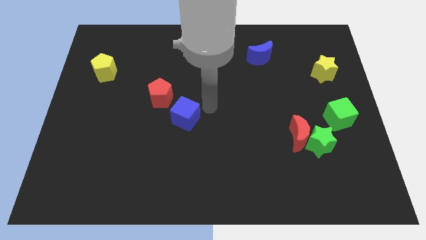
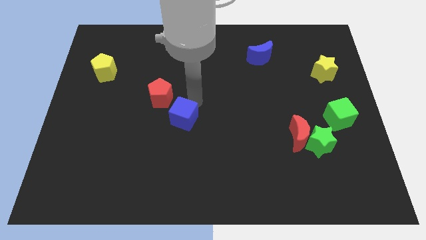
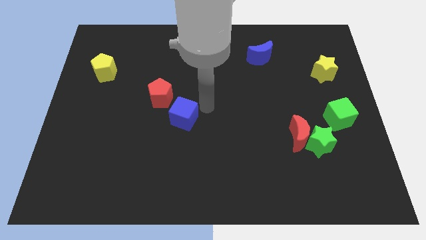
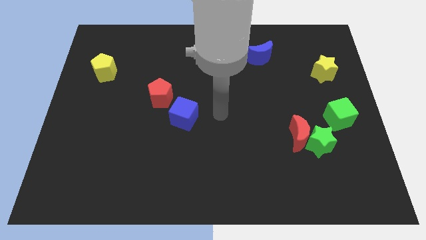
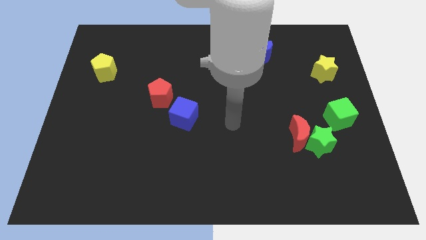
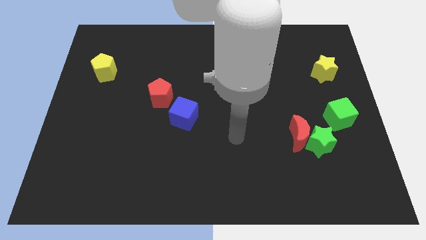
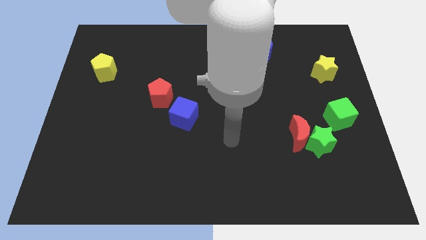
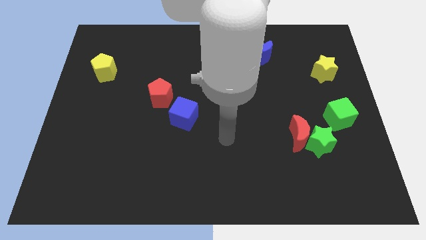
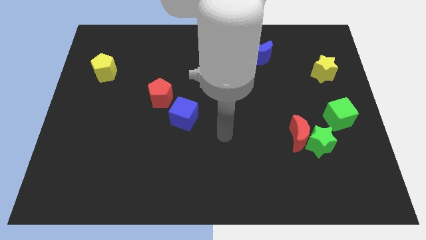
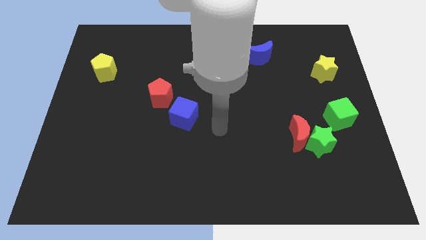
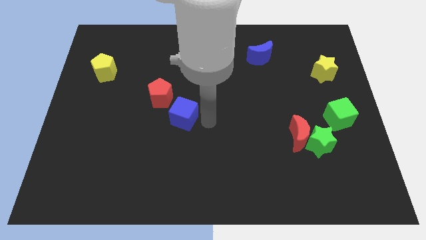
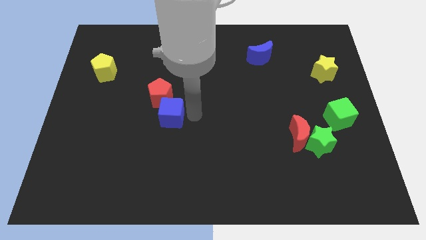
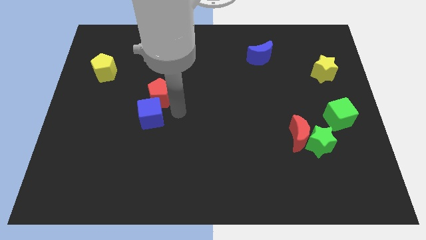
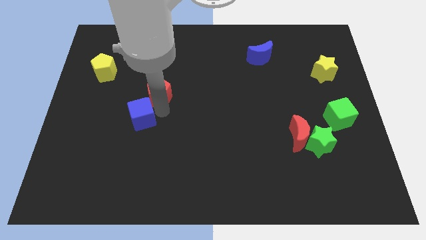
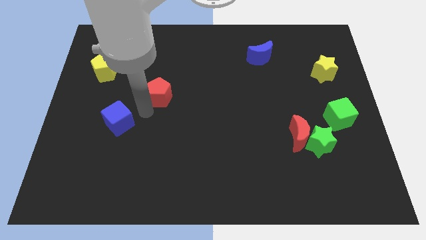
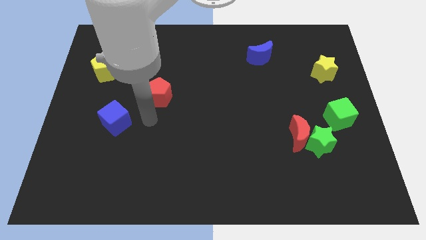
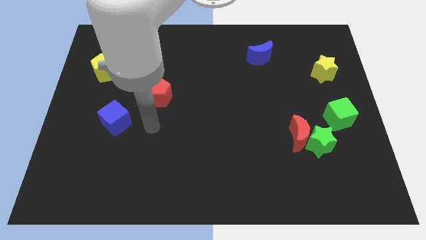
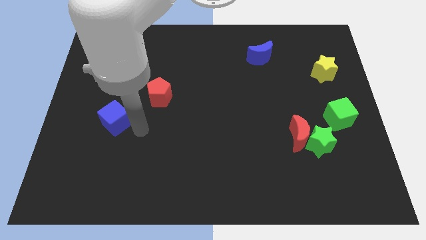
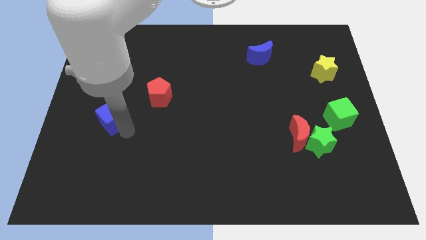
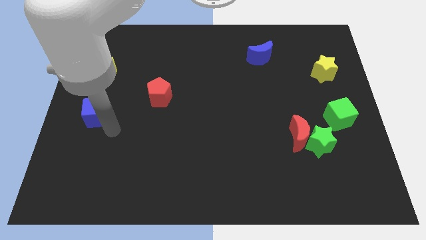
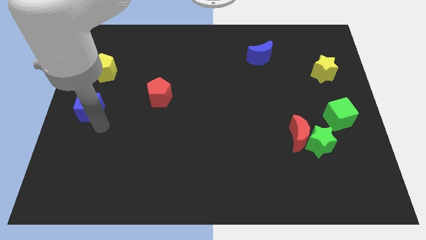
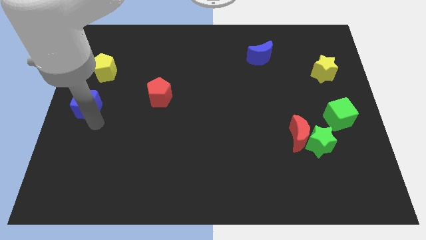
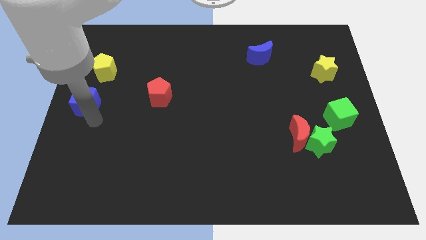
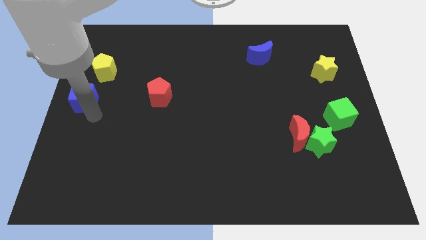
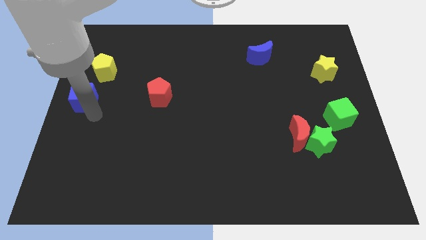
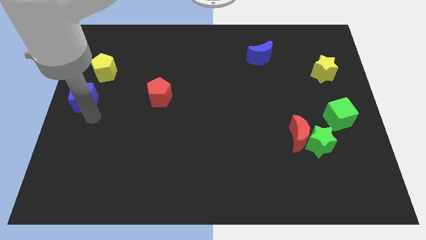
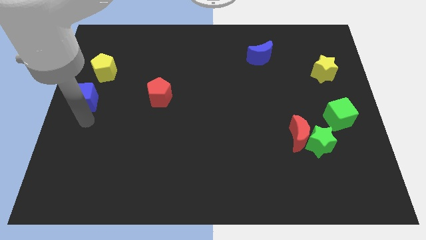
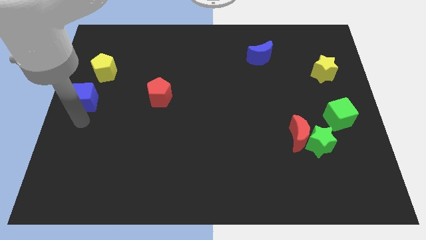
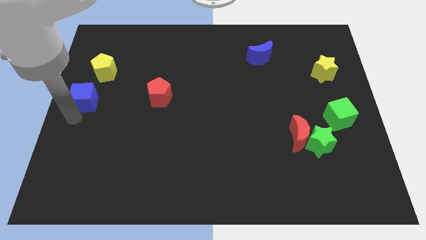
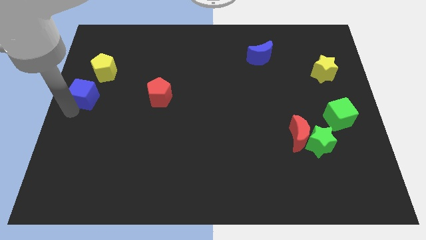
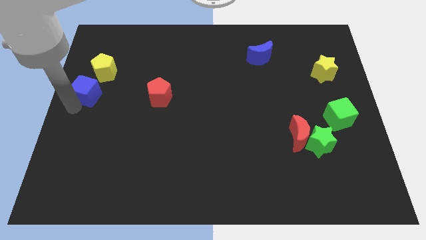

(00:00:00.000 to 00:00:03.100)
separate blue cube from red pentagon

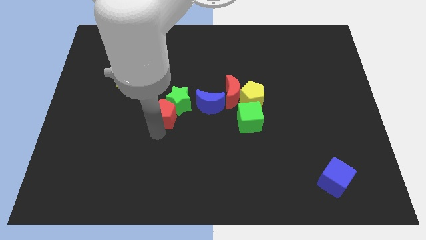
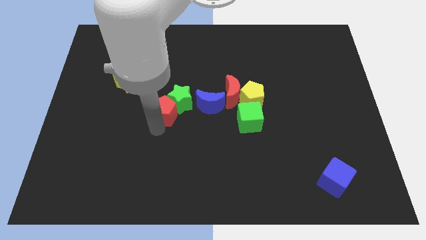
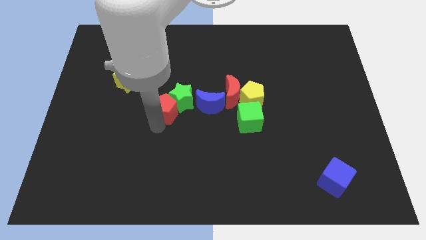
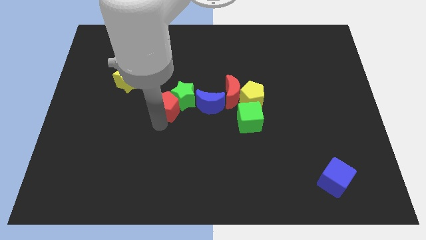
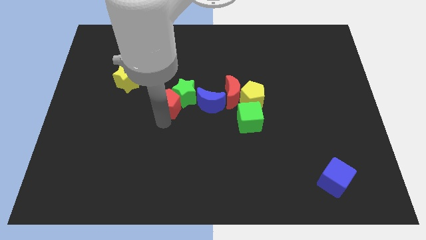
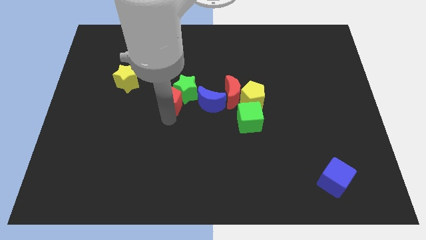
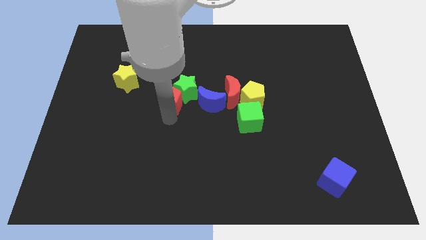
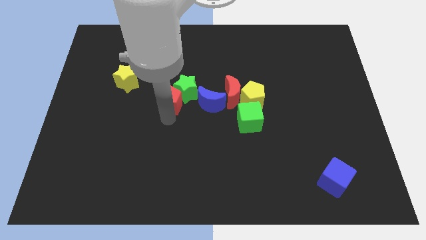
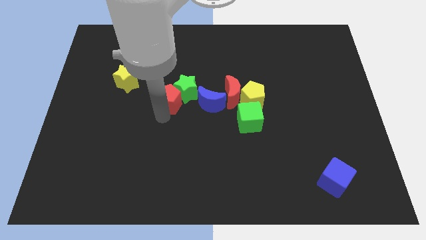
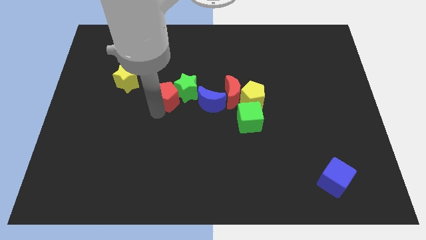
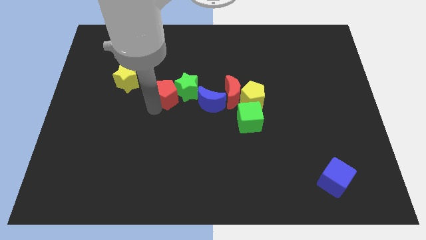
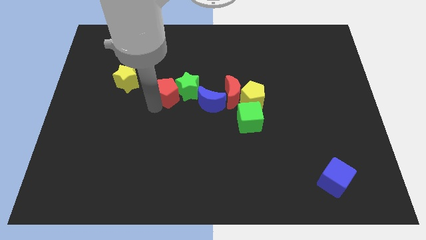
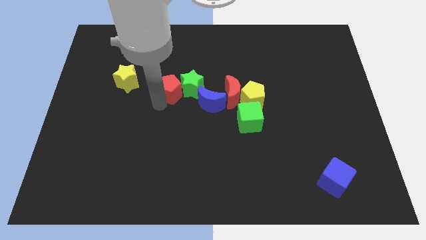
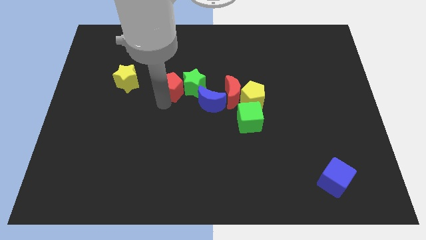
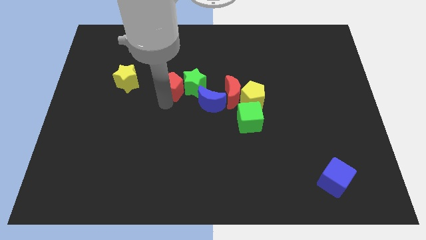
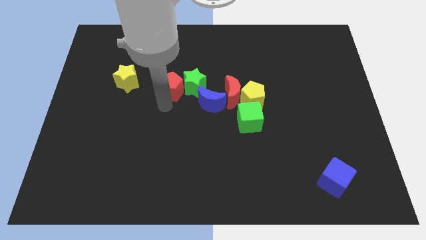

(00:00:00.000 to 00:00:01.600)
push the red pentagon to the left of the green star

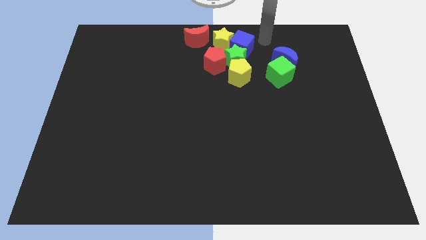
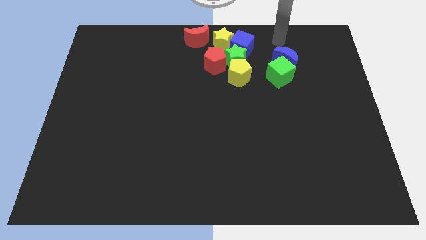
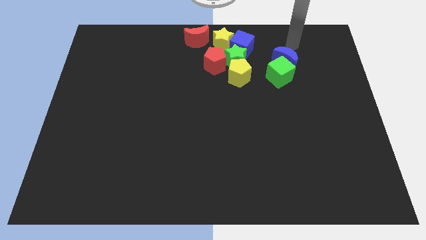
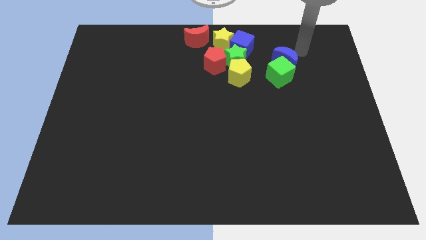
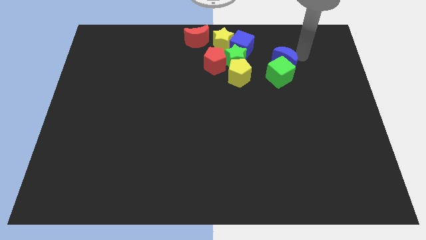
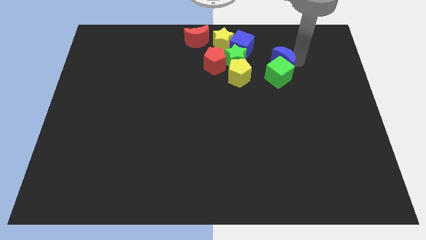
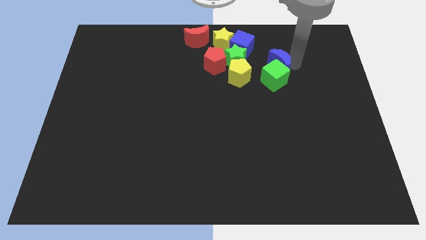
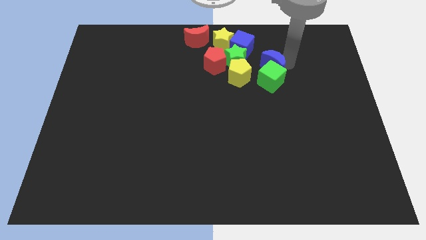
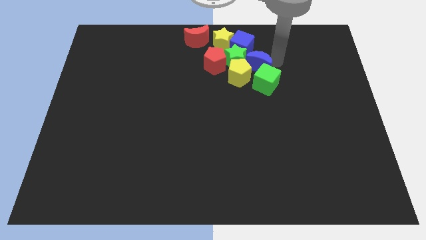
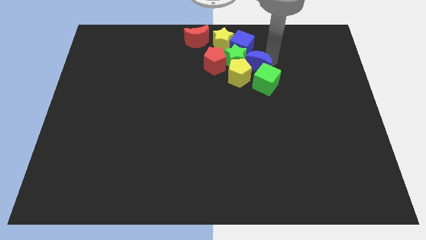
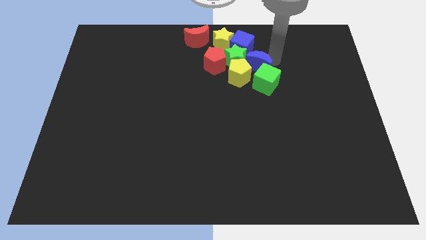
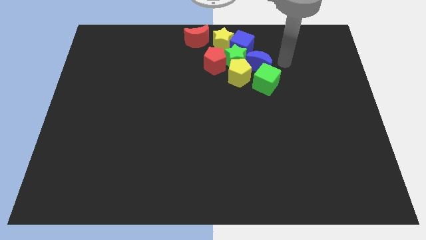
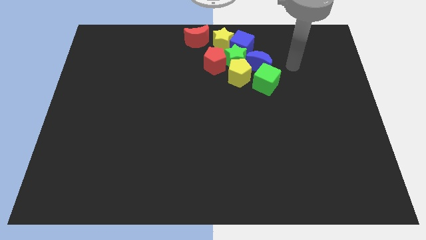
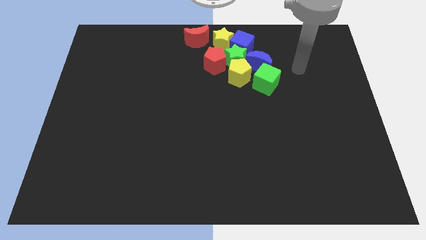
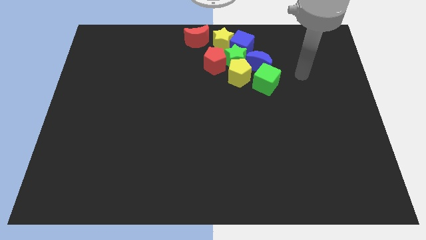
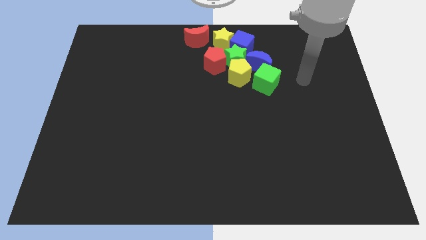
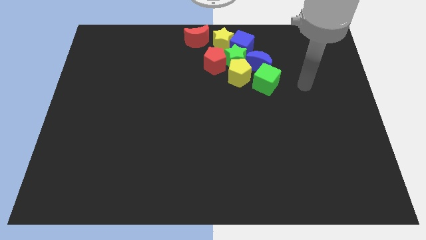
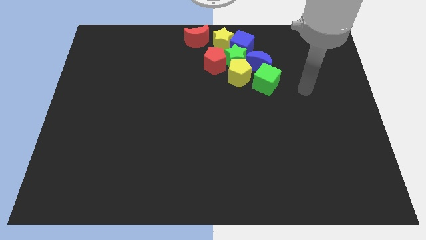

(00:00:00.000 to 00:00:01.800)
move the blue moon into the green star

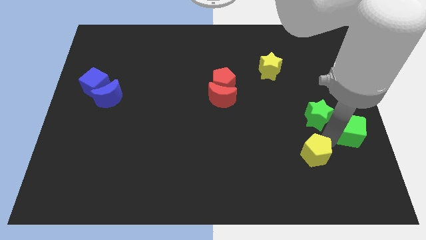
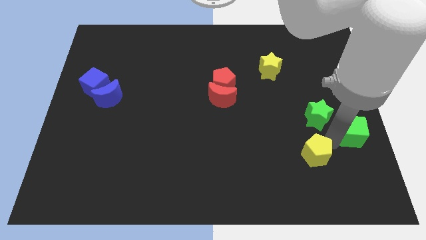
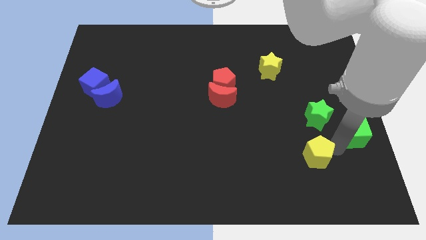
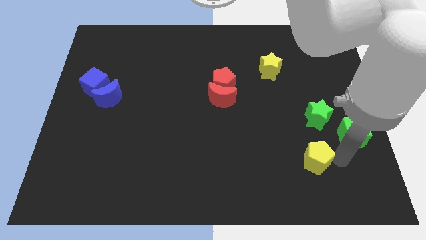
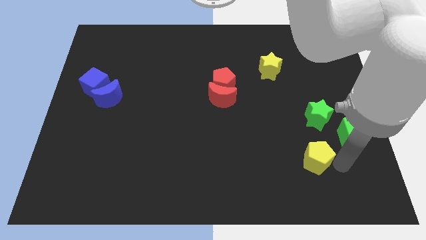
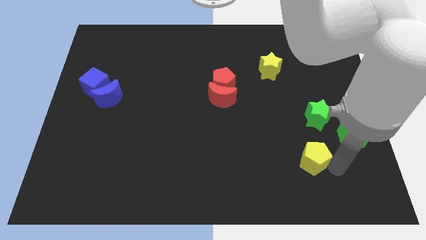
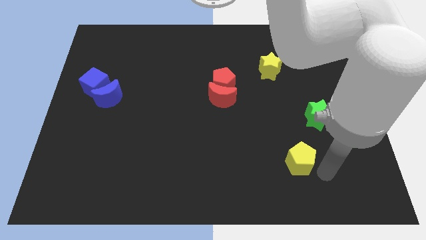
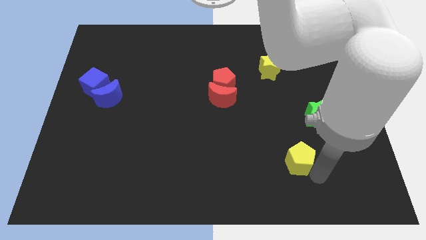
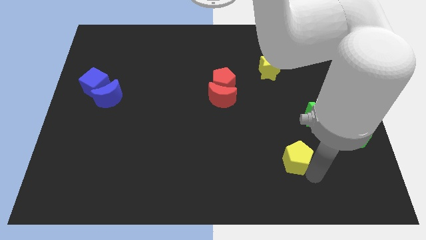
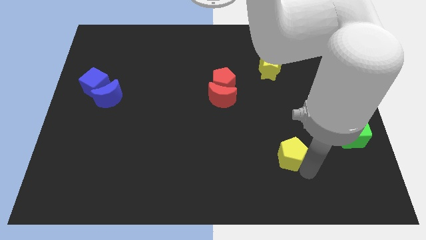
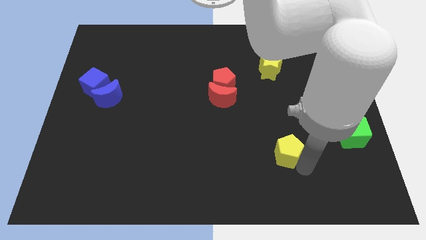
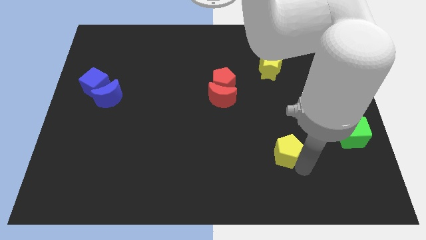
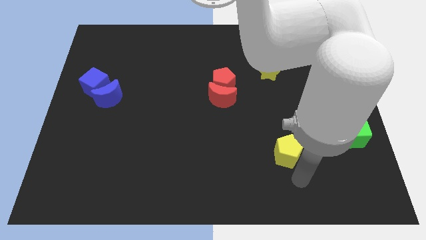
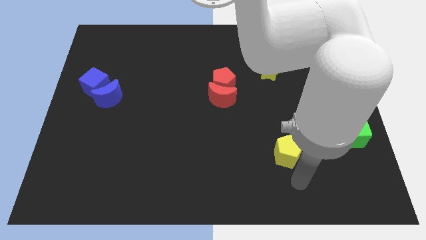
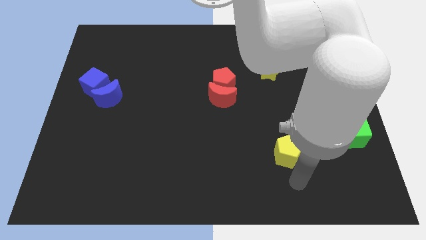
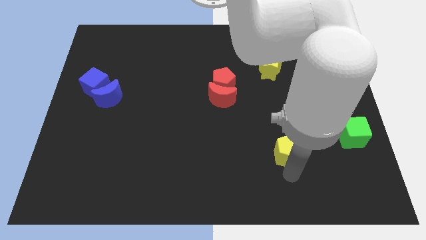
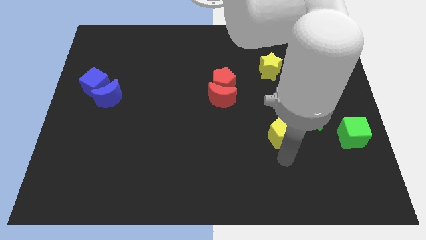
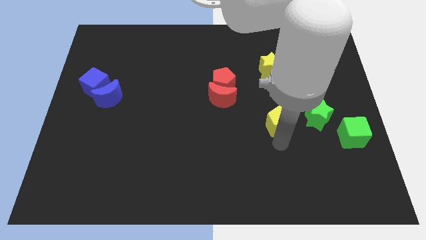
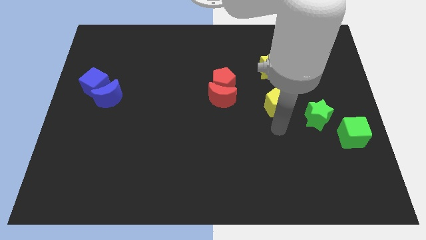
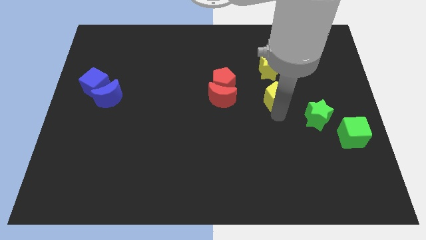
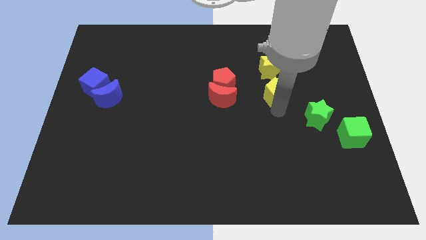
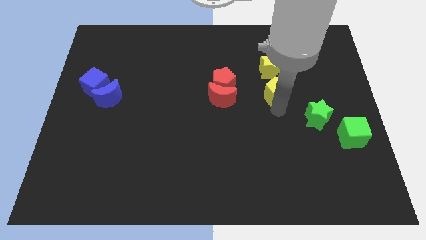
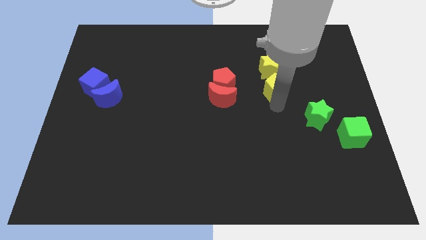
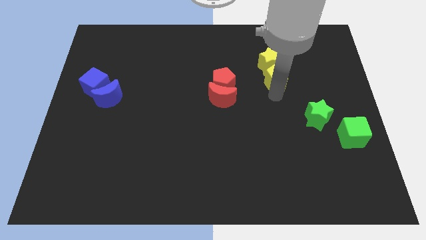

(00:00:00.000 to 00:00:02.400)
move the yellow pentagon into the yellow star

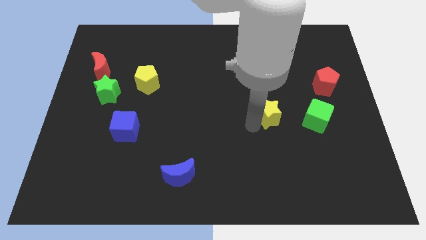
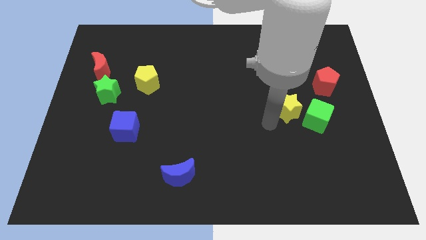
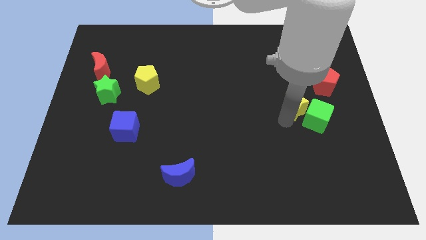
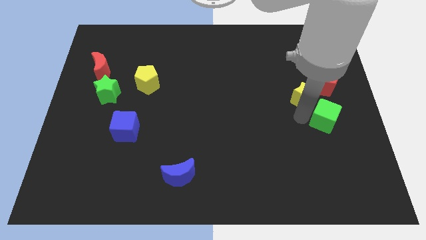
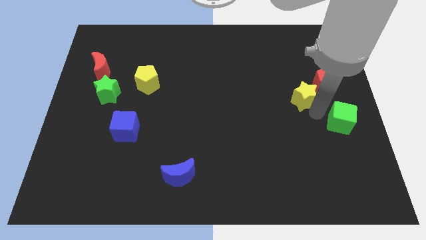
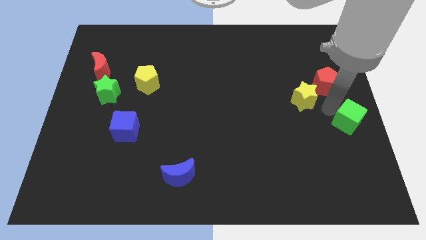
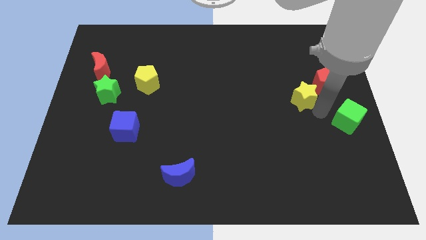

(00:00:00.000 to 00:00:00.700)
place yellow star near red pentagon
